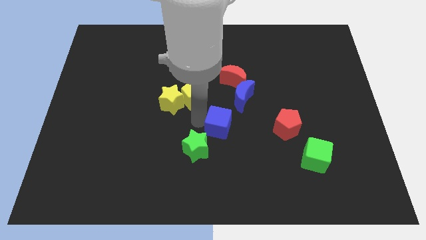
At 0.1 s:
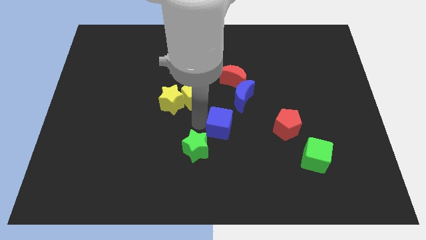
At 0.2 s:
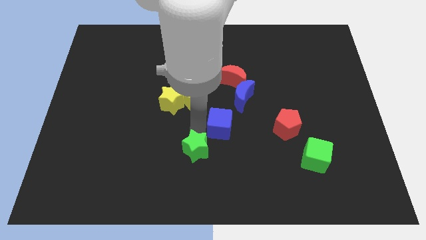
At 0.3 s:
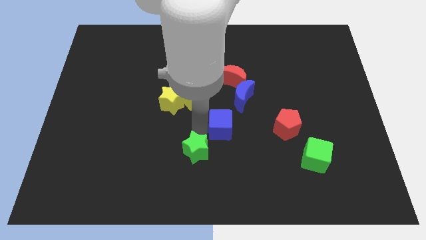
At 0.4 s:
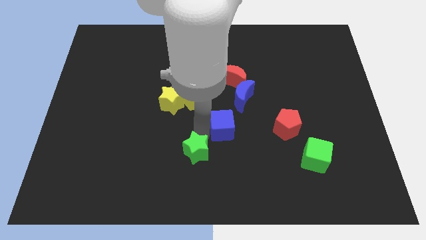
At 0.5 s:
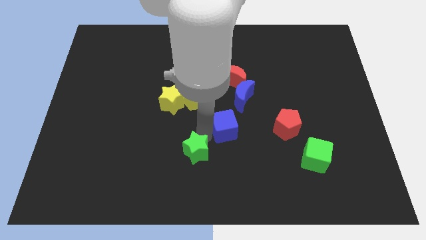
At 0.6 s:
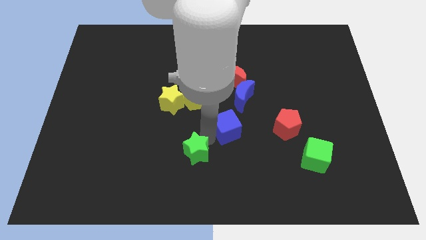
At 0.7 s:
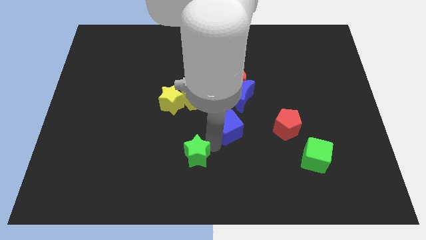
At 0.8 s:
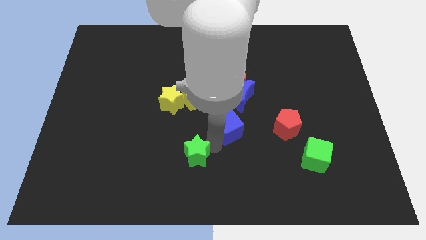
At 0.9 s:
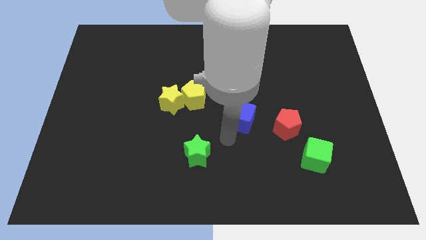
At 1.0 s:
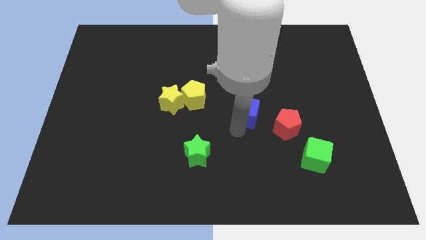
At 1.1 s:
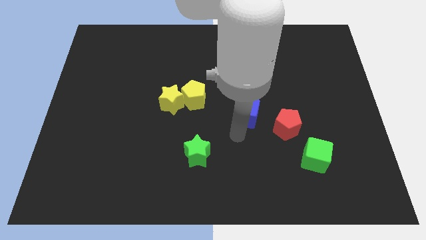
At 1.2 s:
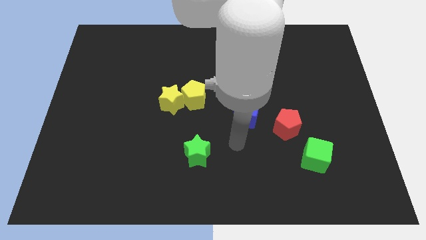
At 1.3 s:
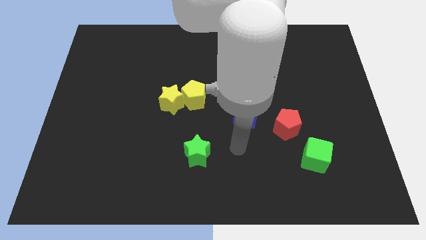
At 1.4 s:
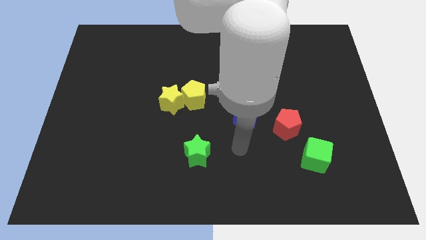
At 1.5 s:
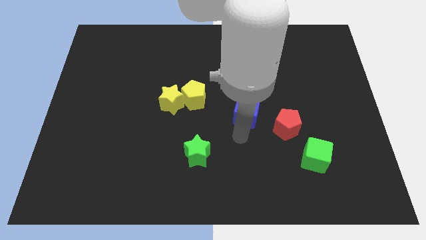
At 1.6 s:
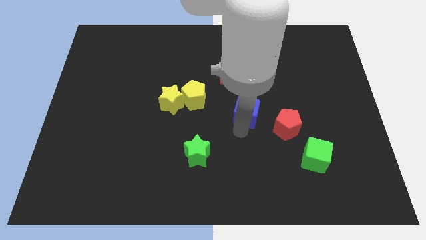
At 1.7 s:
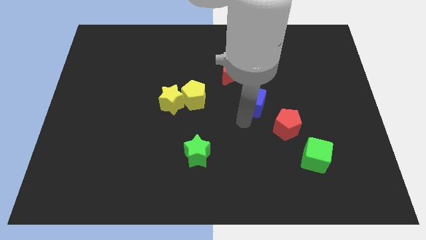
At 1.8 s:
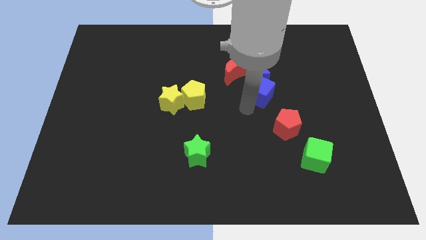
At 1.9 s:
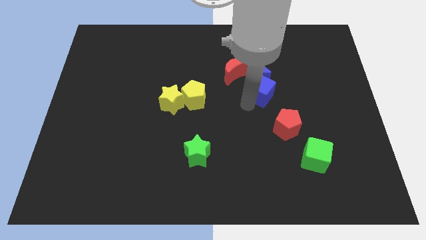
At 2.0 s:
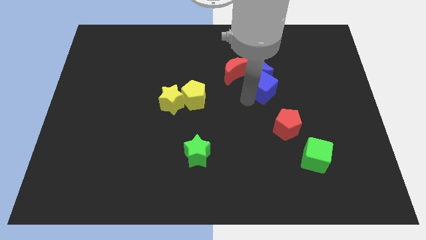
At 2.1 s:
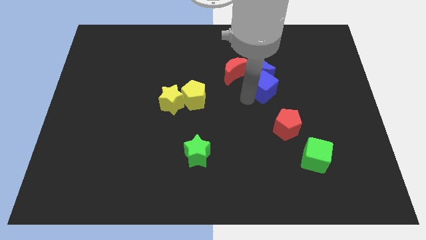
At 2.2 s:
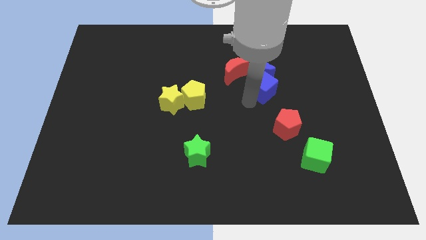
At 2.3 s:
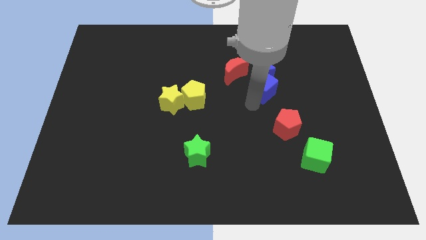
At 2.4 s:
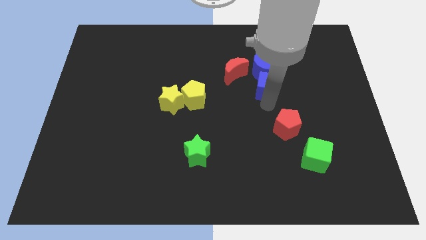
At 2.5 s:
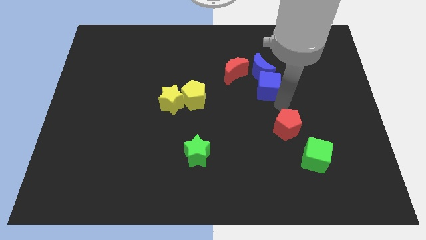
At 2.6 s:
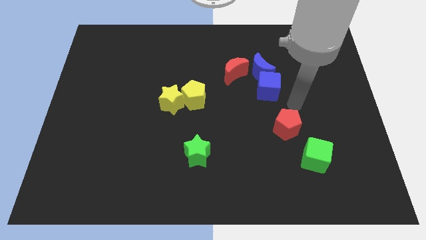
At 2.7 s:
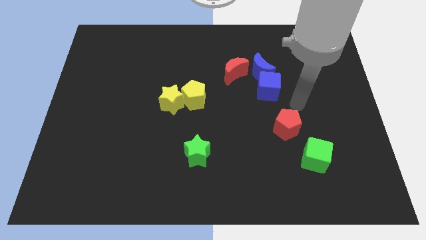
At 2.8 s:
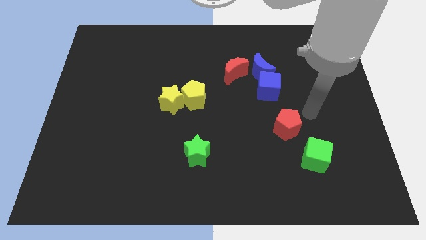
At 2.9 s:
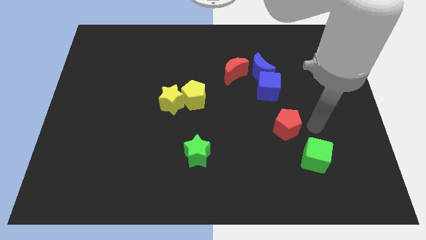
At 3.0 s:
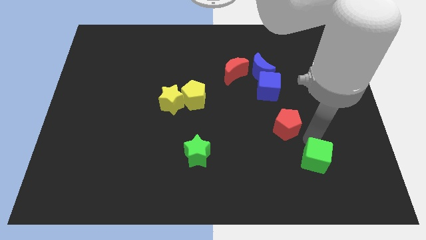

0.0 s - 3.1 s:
push the blue cube into the blue crescent

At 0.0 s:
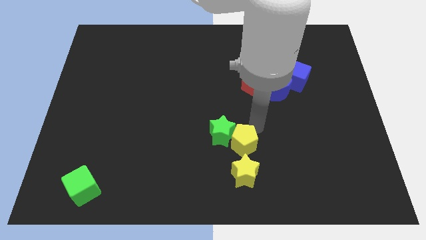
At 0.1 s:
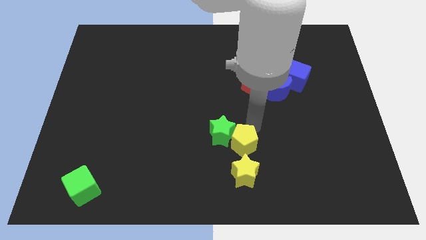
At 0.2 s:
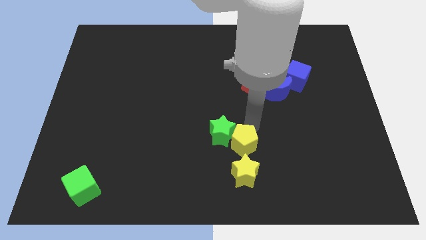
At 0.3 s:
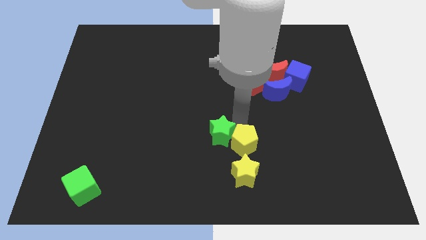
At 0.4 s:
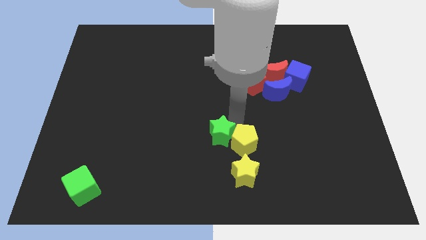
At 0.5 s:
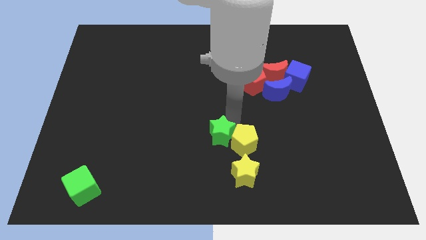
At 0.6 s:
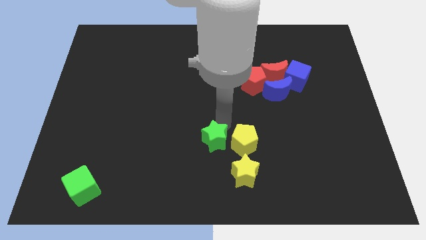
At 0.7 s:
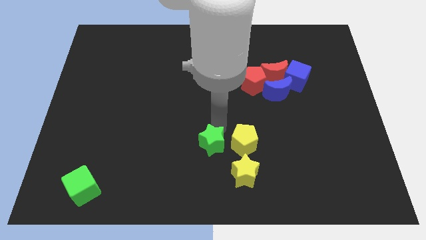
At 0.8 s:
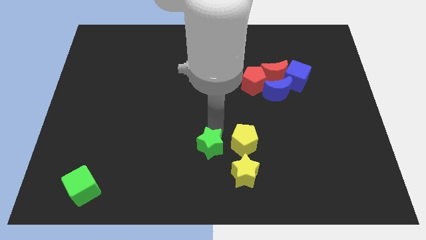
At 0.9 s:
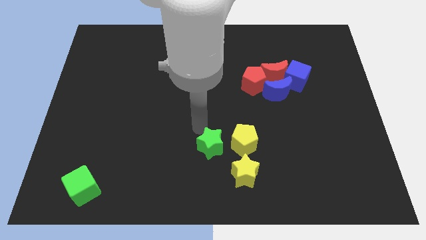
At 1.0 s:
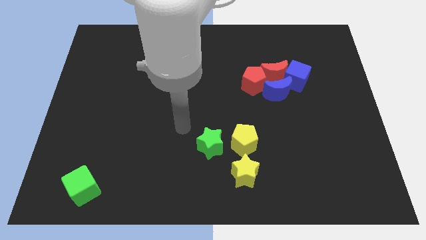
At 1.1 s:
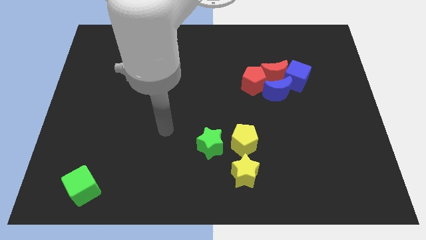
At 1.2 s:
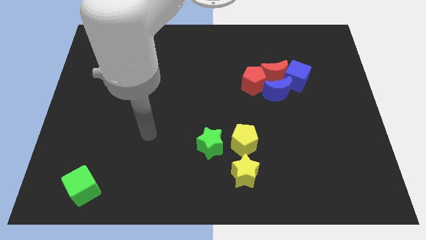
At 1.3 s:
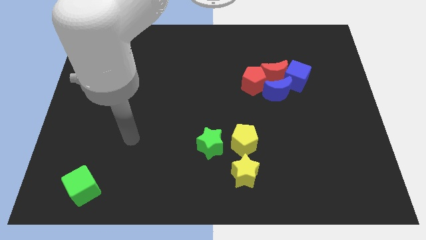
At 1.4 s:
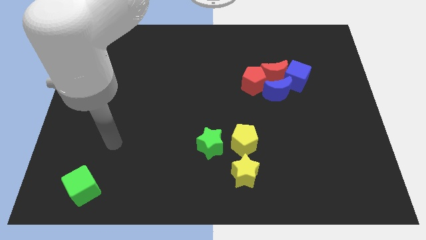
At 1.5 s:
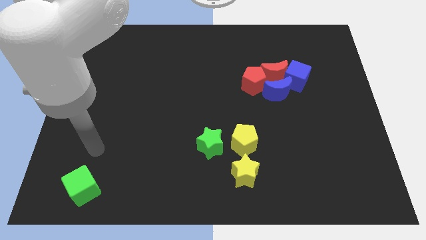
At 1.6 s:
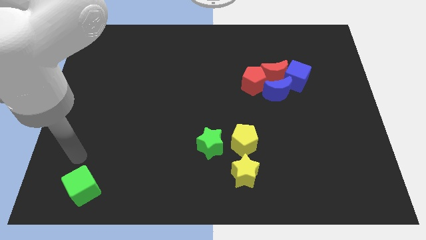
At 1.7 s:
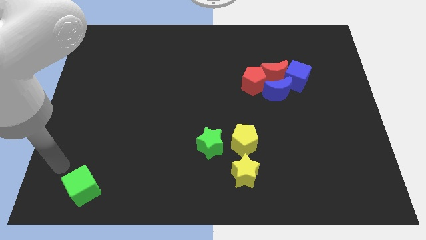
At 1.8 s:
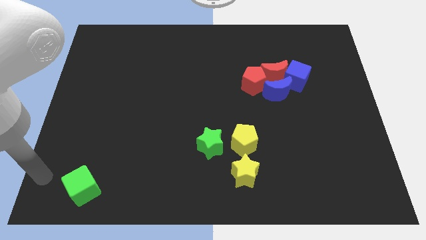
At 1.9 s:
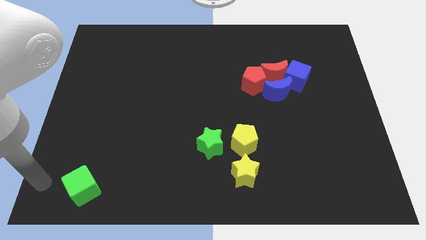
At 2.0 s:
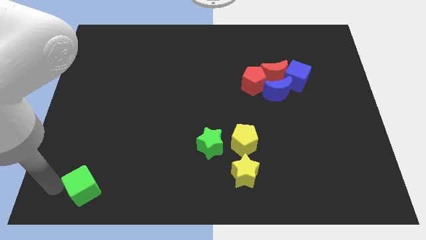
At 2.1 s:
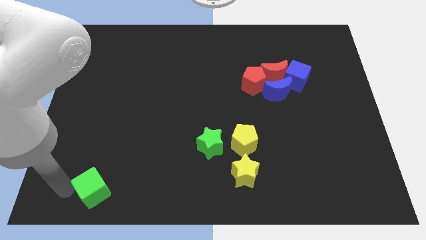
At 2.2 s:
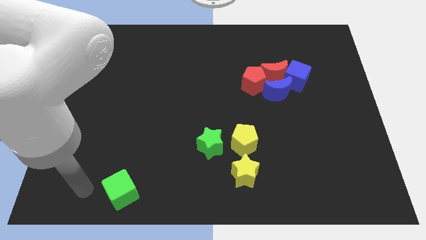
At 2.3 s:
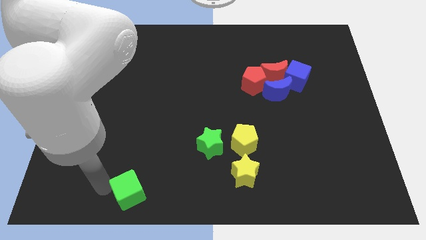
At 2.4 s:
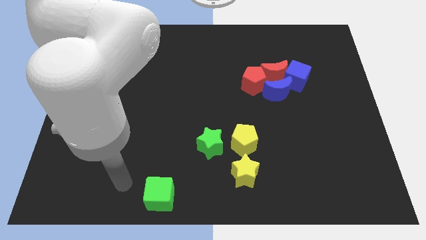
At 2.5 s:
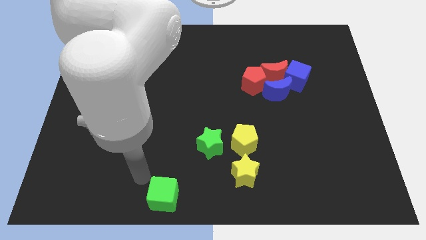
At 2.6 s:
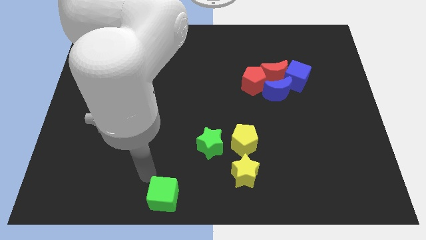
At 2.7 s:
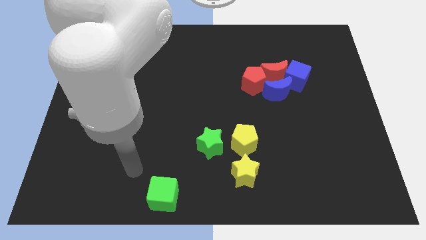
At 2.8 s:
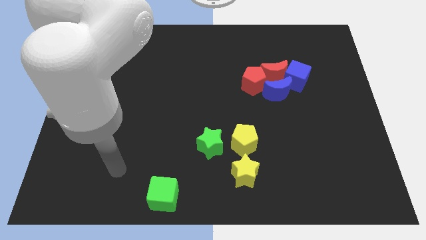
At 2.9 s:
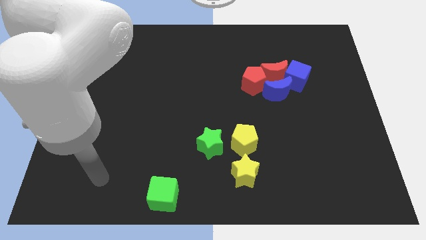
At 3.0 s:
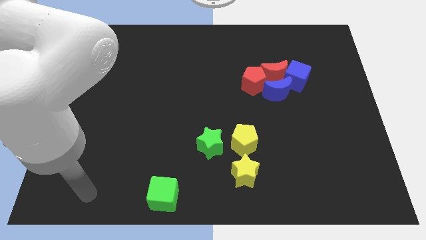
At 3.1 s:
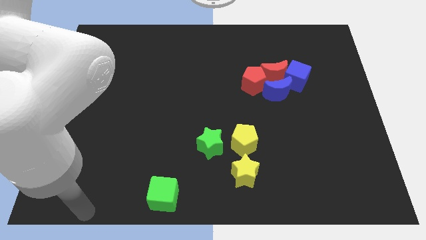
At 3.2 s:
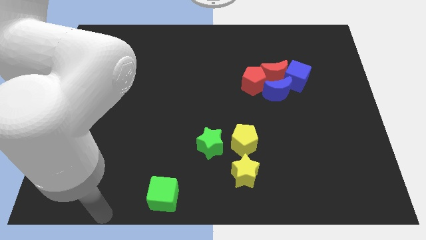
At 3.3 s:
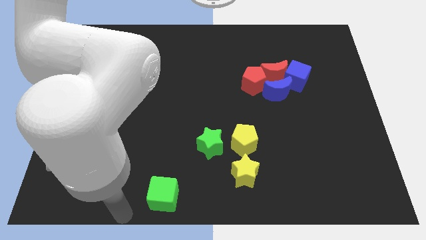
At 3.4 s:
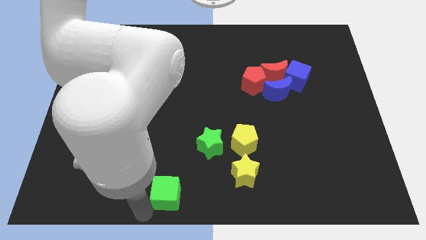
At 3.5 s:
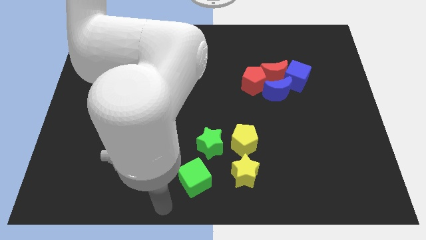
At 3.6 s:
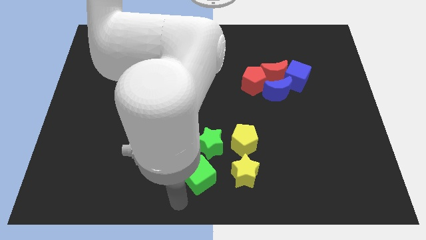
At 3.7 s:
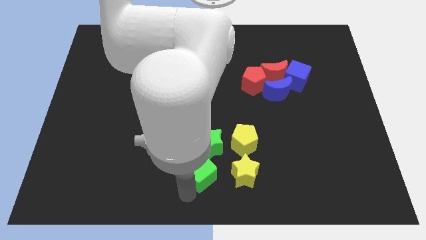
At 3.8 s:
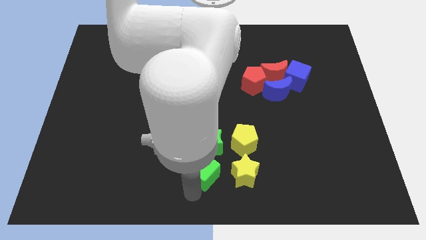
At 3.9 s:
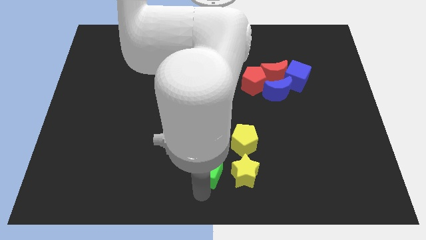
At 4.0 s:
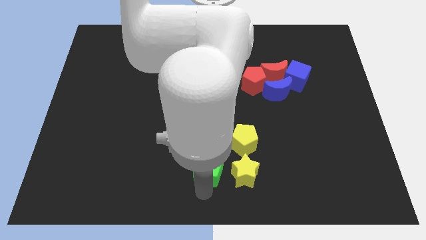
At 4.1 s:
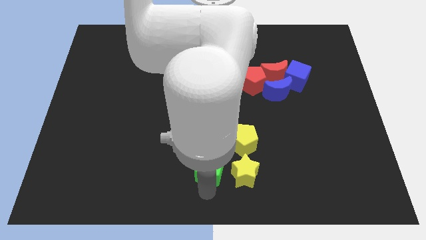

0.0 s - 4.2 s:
move green blocks adjacent to each other

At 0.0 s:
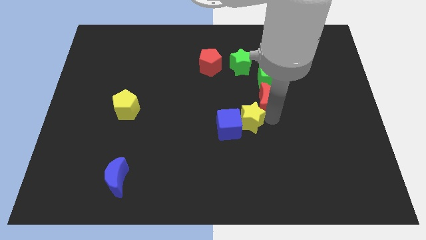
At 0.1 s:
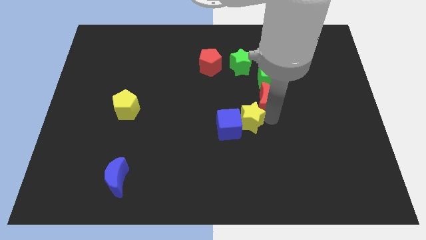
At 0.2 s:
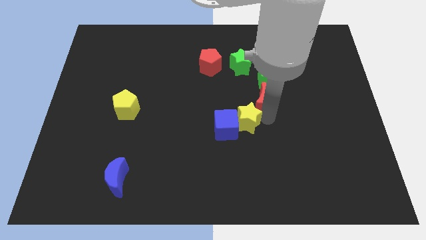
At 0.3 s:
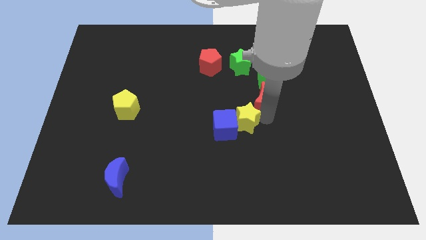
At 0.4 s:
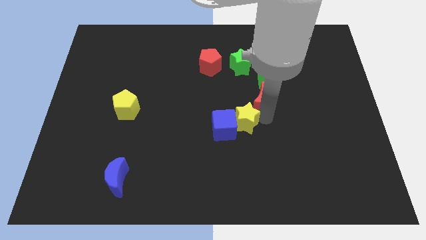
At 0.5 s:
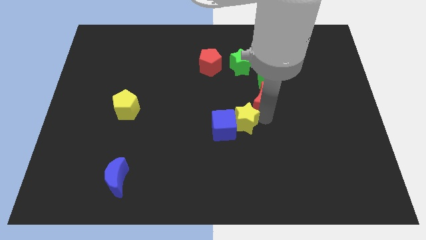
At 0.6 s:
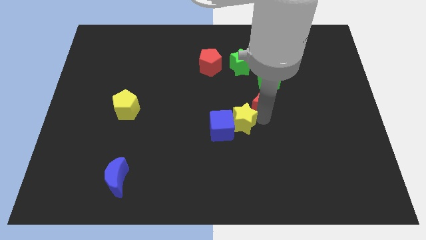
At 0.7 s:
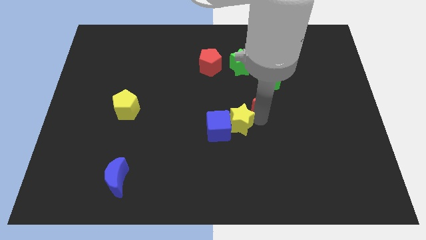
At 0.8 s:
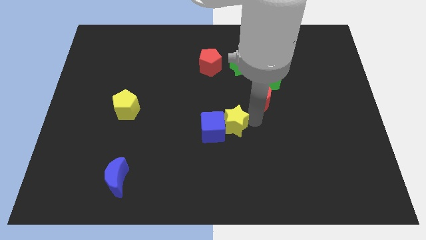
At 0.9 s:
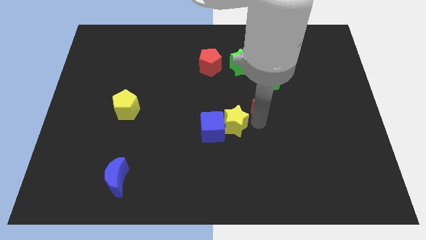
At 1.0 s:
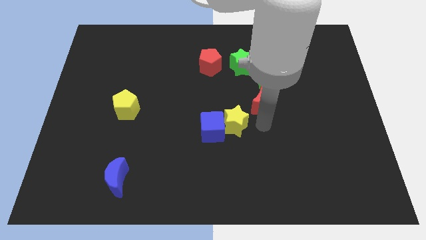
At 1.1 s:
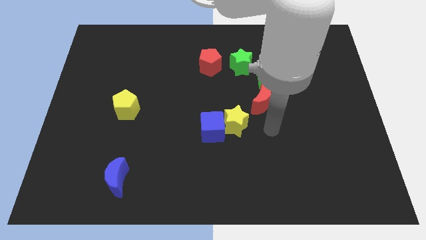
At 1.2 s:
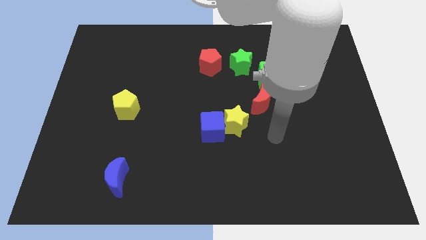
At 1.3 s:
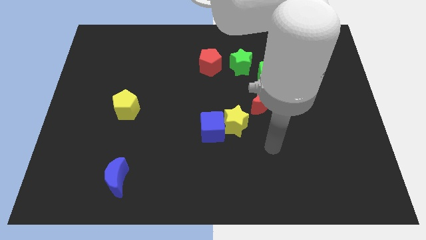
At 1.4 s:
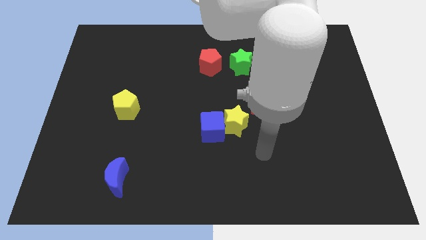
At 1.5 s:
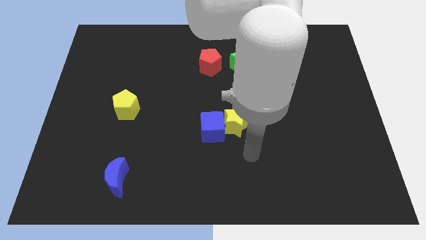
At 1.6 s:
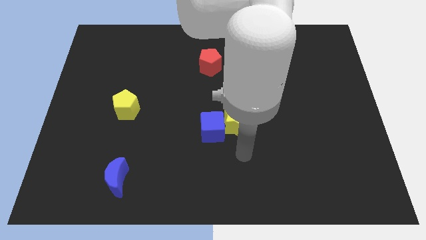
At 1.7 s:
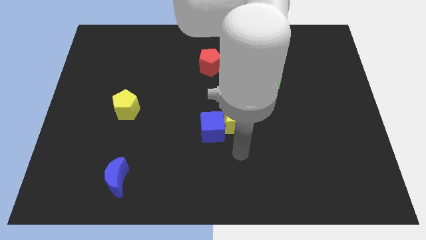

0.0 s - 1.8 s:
slightly push the yellow star and blue cube to the left
